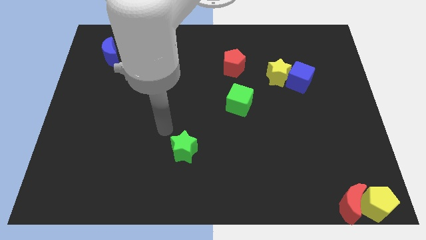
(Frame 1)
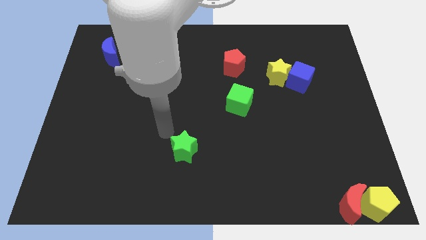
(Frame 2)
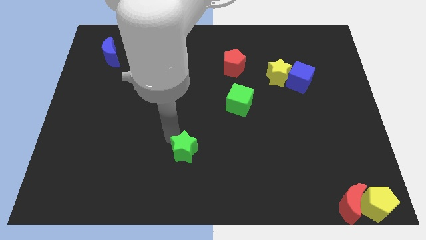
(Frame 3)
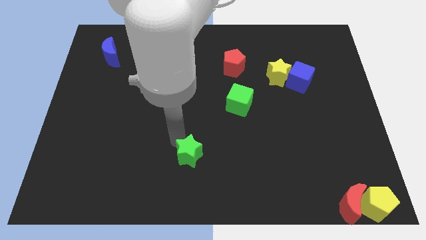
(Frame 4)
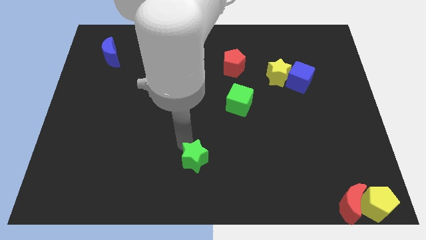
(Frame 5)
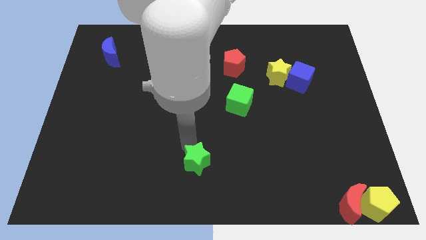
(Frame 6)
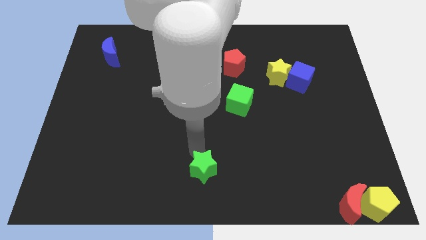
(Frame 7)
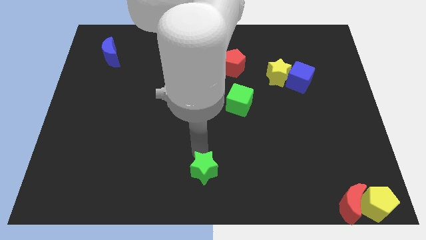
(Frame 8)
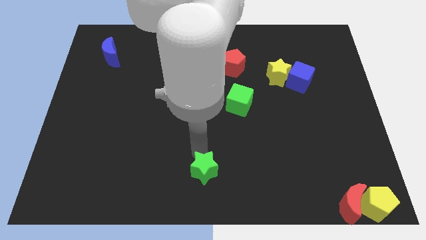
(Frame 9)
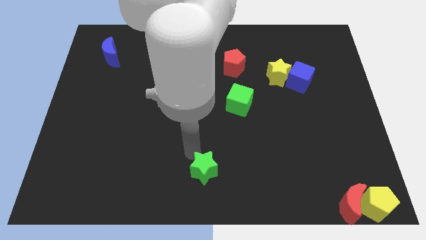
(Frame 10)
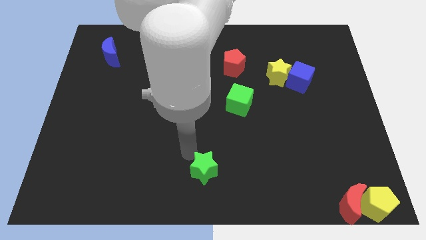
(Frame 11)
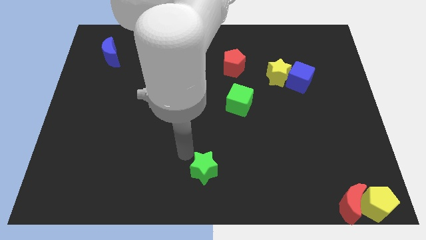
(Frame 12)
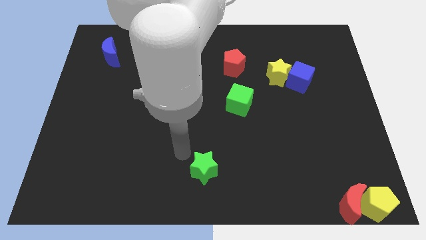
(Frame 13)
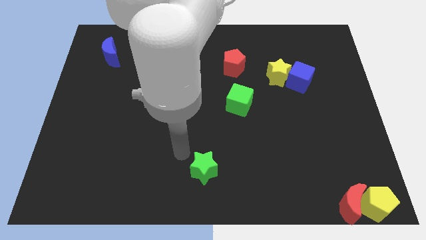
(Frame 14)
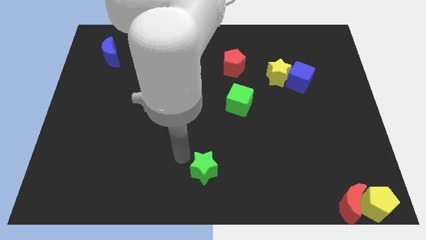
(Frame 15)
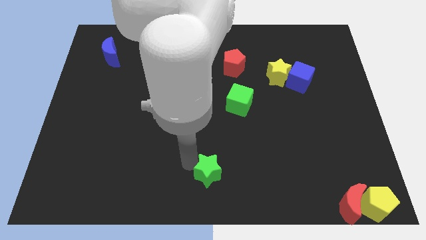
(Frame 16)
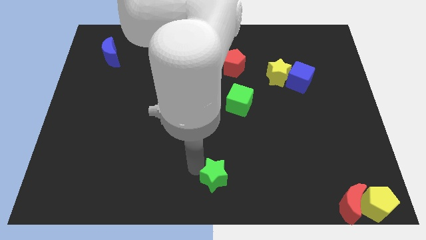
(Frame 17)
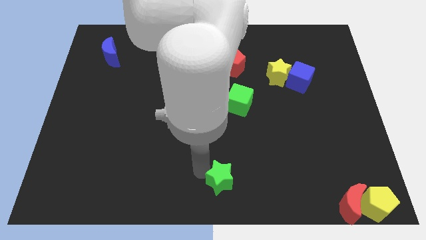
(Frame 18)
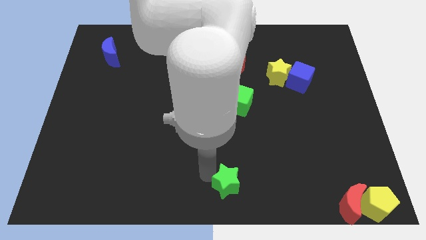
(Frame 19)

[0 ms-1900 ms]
slide the green star towards the bottom center of the board

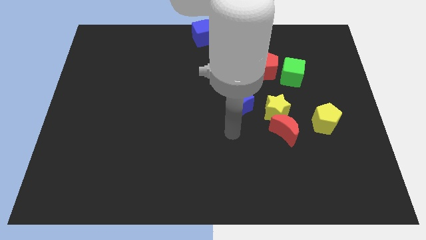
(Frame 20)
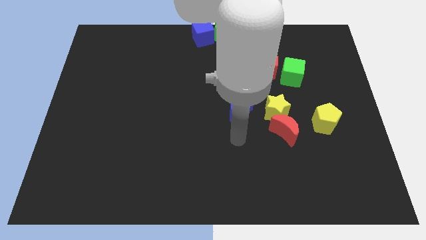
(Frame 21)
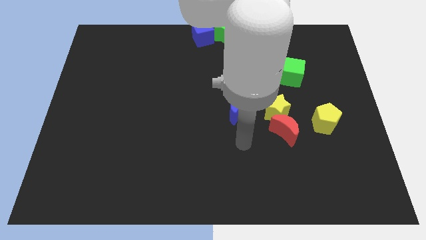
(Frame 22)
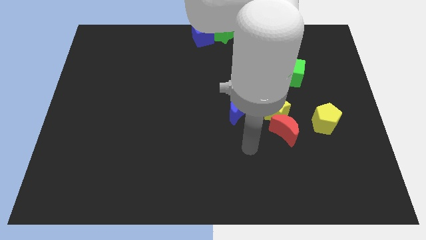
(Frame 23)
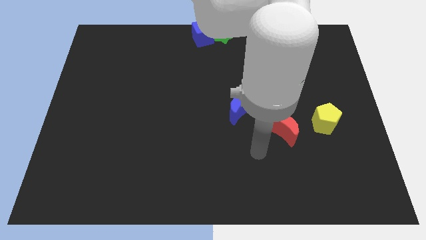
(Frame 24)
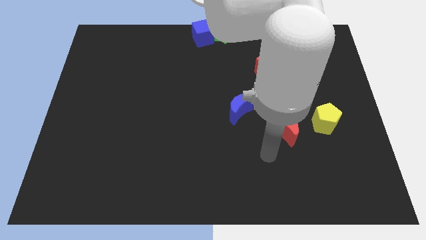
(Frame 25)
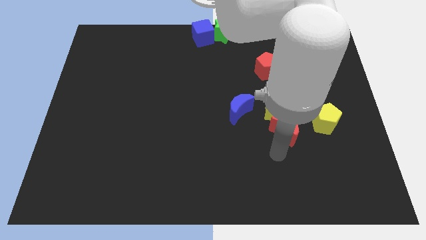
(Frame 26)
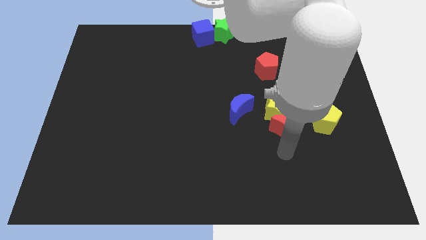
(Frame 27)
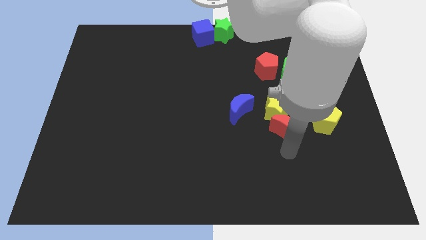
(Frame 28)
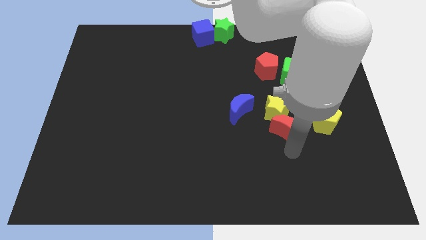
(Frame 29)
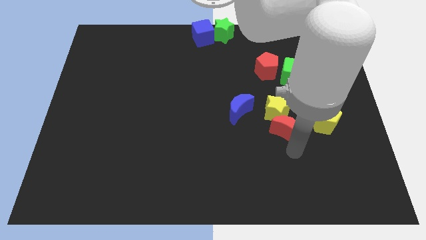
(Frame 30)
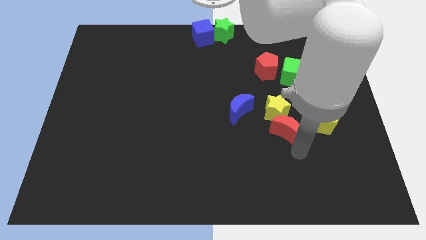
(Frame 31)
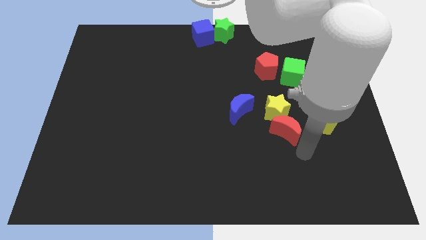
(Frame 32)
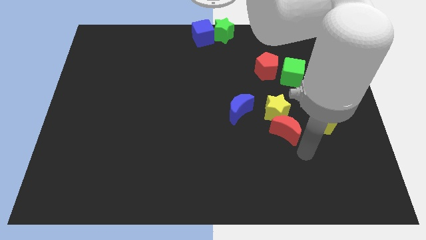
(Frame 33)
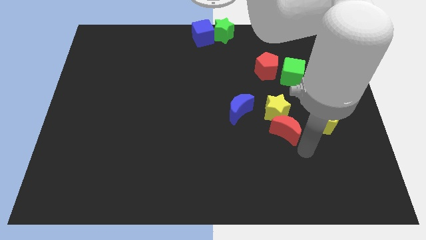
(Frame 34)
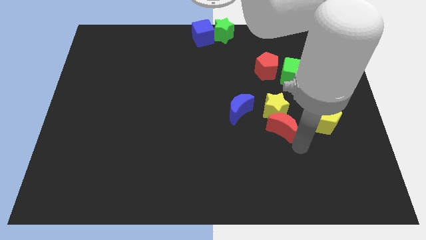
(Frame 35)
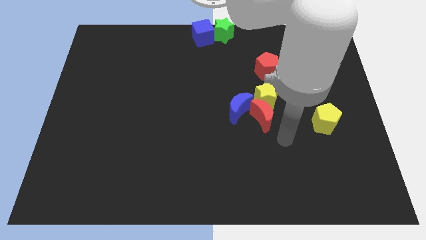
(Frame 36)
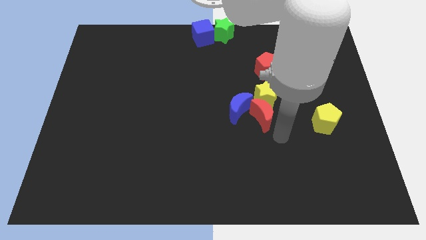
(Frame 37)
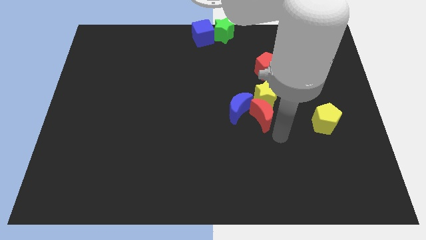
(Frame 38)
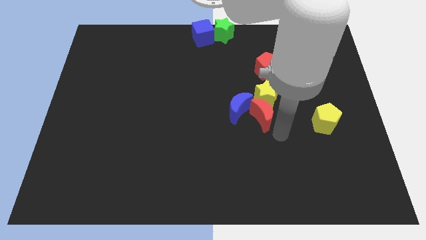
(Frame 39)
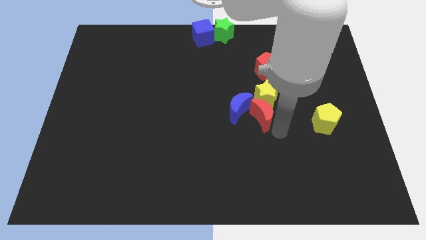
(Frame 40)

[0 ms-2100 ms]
slide red crescent towards the blue crescent

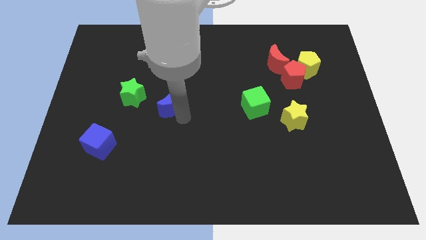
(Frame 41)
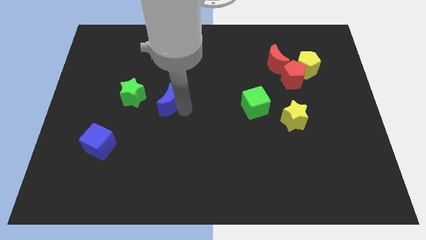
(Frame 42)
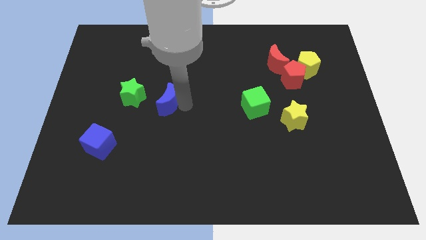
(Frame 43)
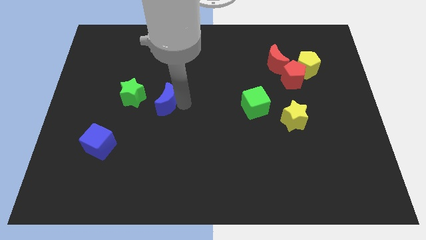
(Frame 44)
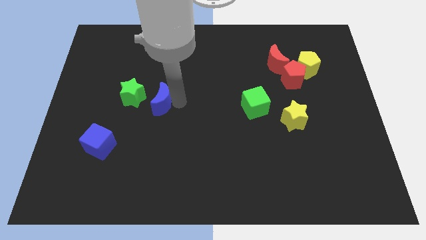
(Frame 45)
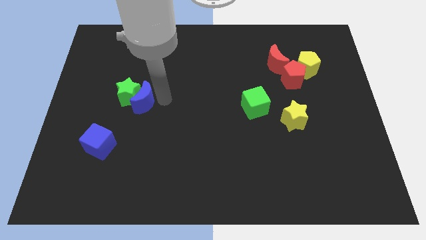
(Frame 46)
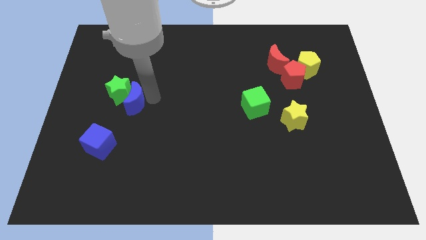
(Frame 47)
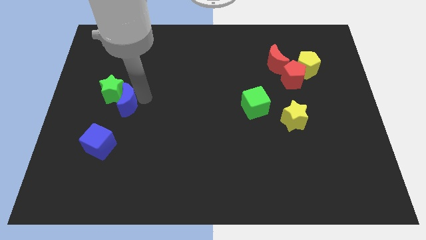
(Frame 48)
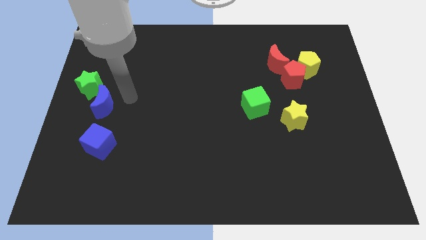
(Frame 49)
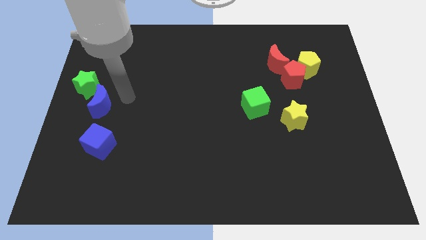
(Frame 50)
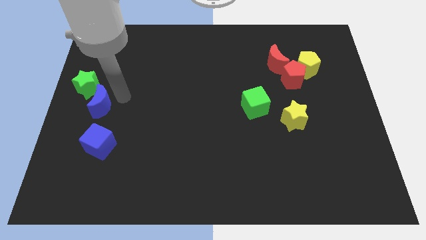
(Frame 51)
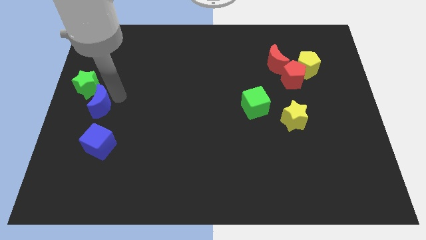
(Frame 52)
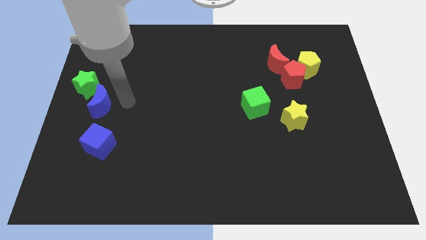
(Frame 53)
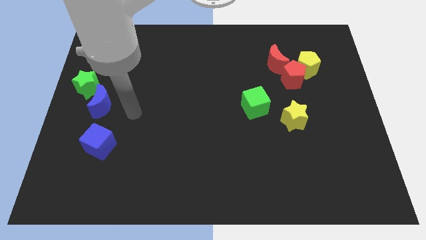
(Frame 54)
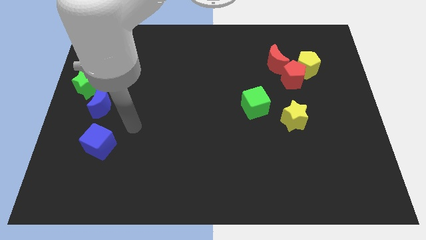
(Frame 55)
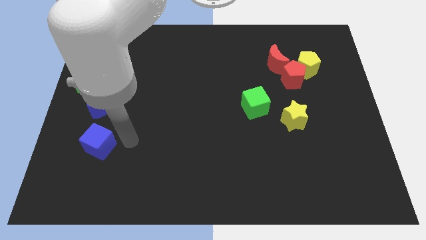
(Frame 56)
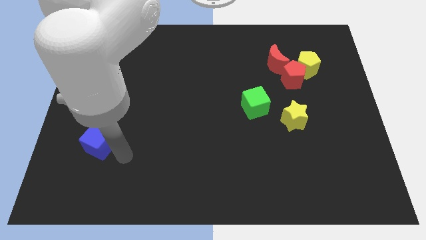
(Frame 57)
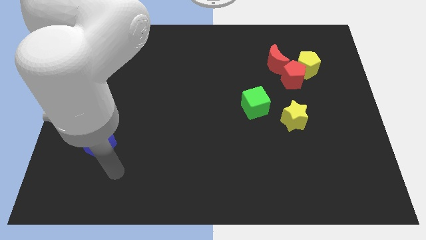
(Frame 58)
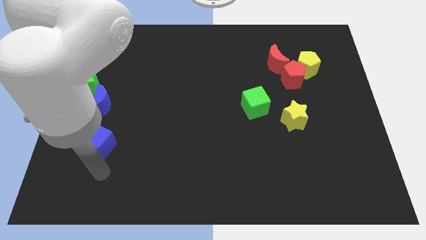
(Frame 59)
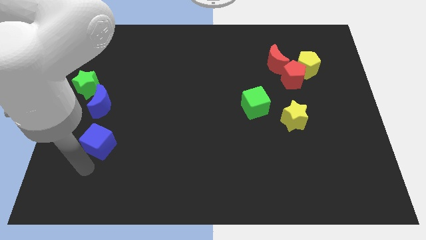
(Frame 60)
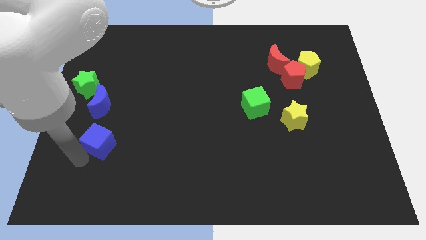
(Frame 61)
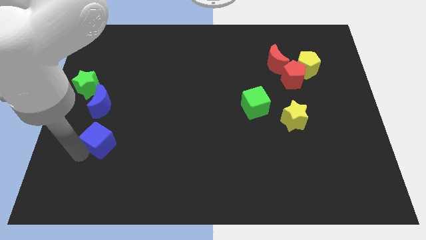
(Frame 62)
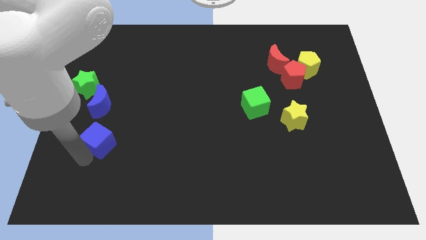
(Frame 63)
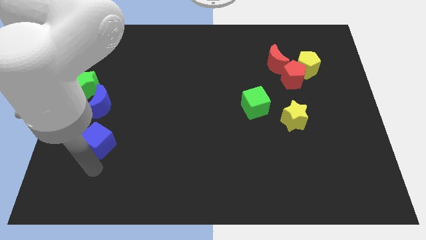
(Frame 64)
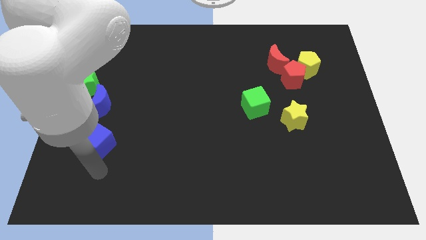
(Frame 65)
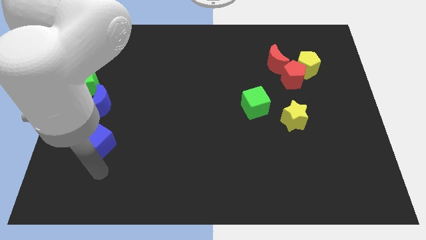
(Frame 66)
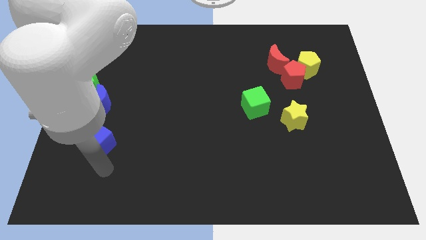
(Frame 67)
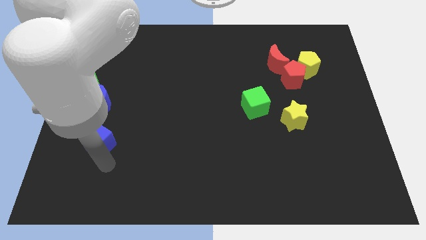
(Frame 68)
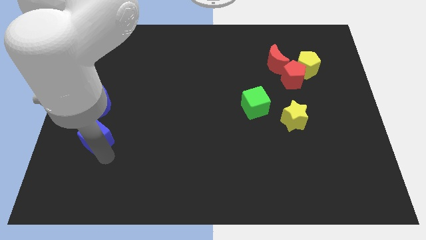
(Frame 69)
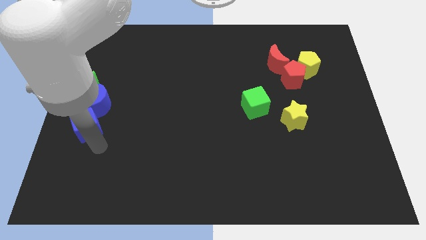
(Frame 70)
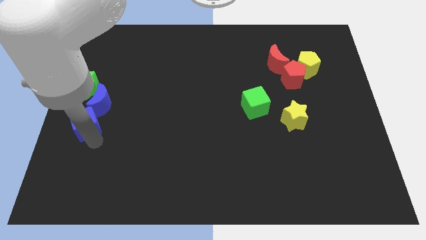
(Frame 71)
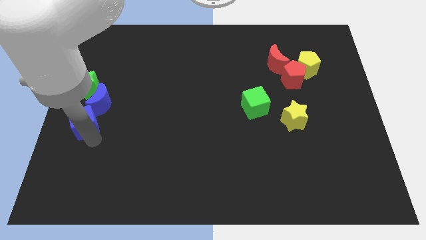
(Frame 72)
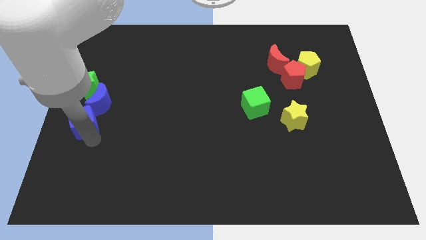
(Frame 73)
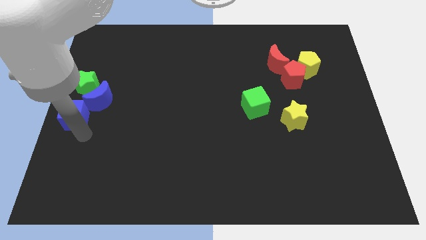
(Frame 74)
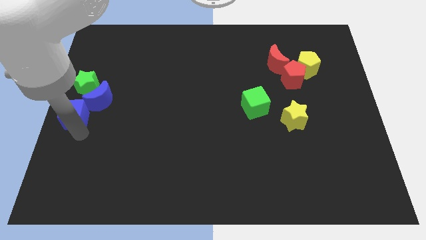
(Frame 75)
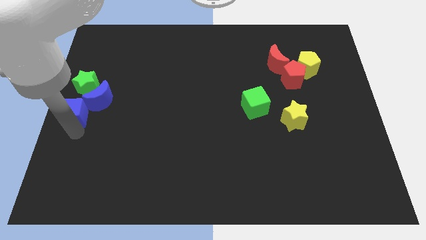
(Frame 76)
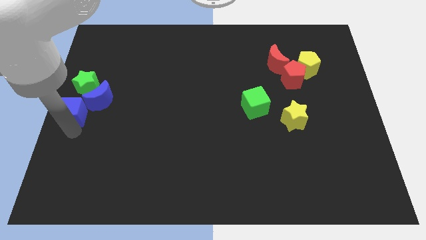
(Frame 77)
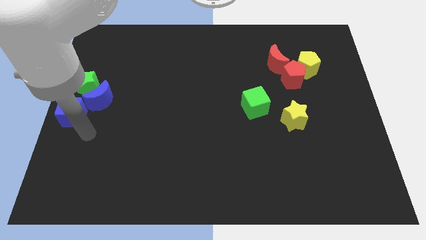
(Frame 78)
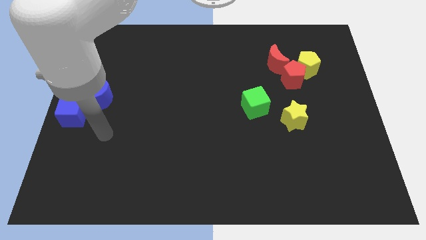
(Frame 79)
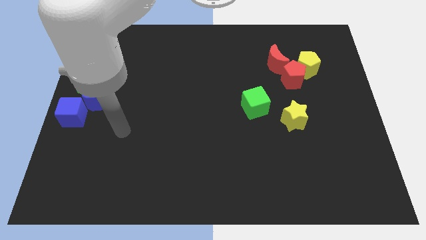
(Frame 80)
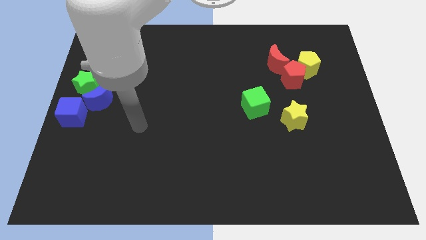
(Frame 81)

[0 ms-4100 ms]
push the blue cube into the blue crescent

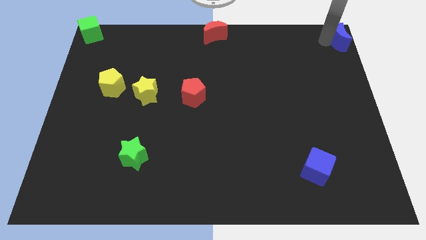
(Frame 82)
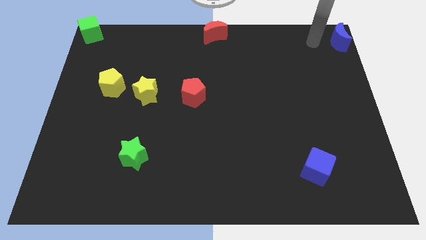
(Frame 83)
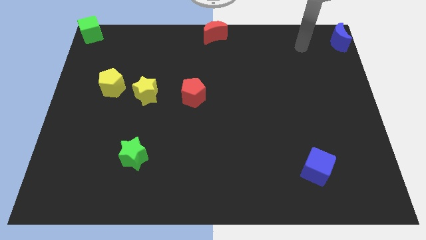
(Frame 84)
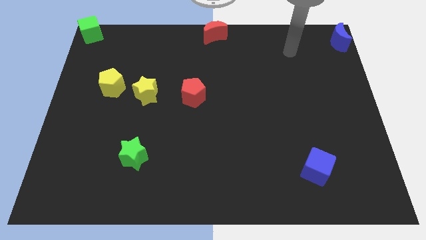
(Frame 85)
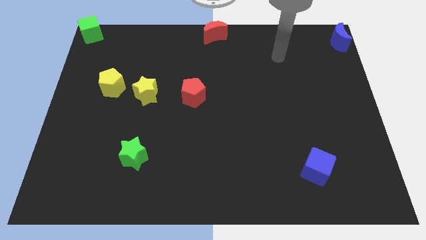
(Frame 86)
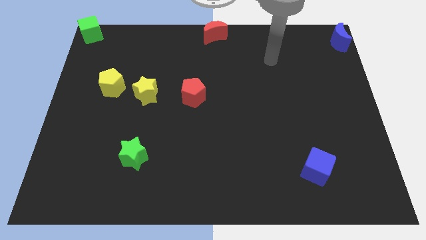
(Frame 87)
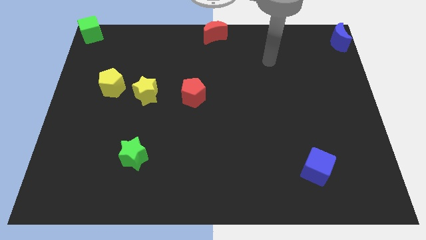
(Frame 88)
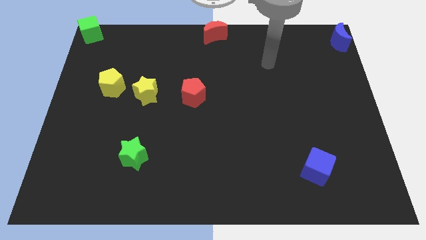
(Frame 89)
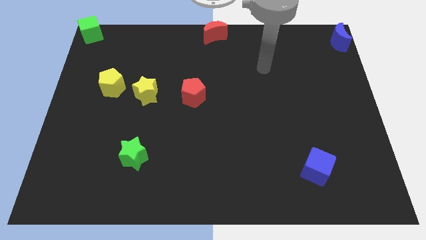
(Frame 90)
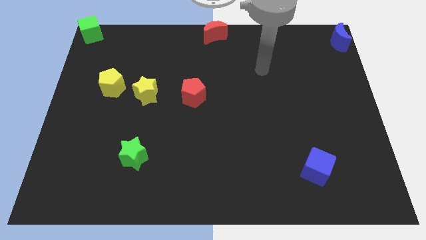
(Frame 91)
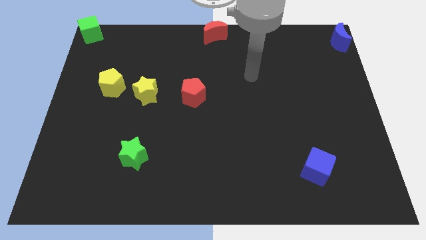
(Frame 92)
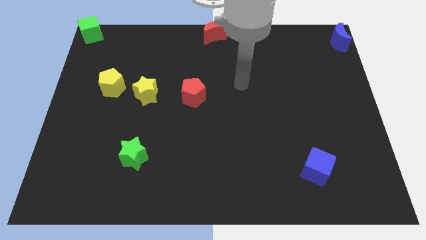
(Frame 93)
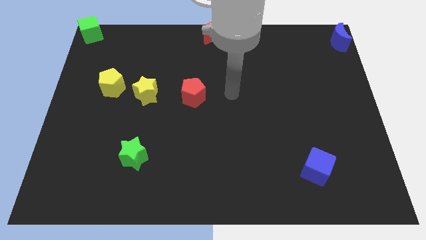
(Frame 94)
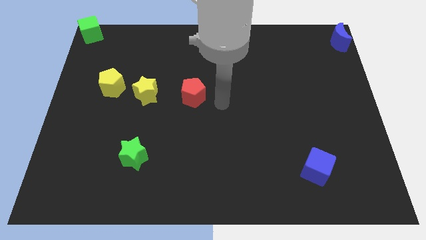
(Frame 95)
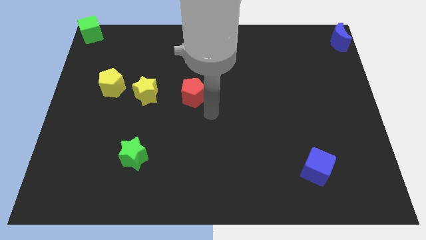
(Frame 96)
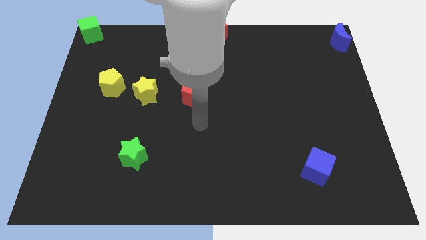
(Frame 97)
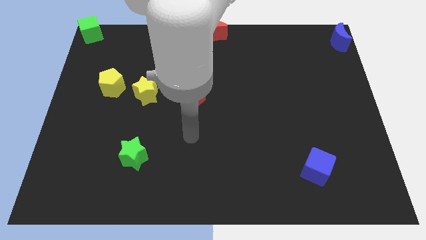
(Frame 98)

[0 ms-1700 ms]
go away from the blue moon
